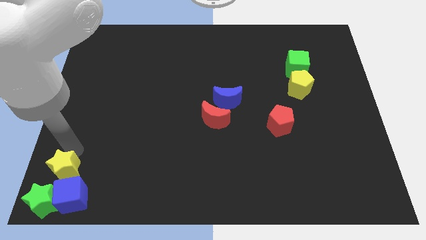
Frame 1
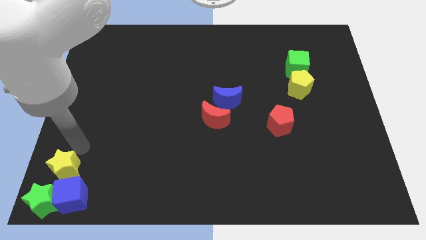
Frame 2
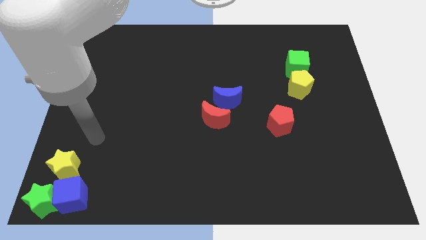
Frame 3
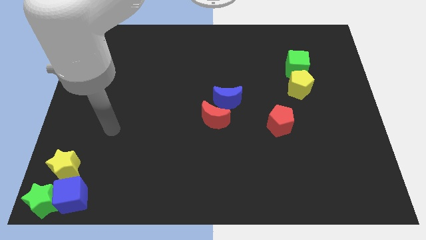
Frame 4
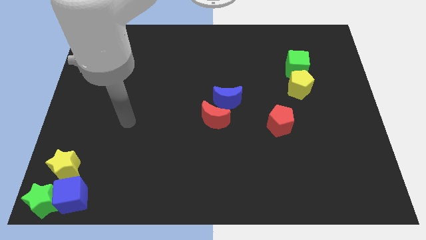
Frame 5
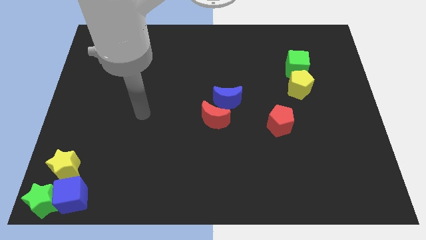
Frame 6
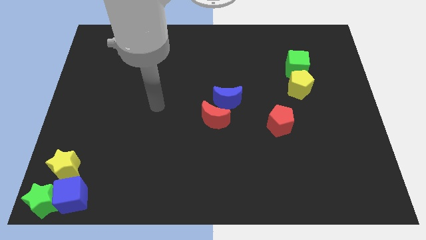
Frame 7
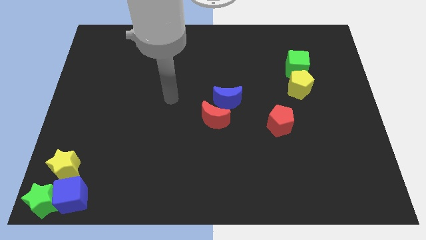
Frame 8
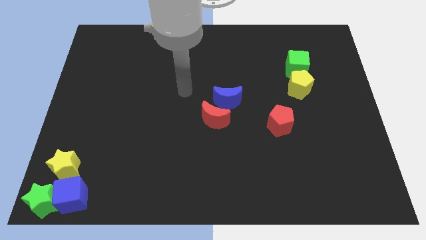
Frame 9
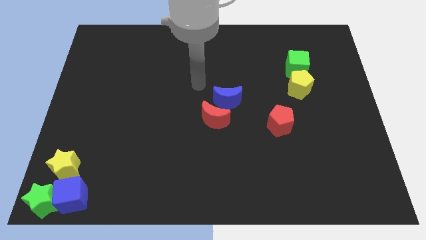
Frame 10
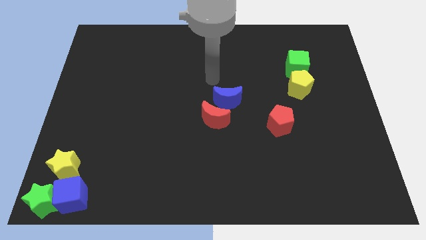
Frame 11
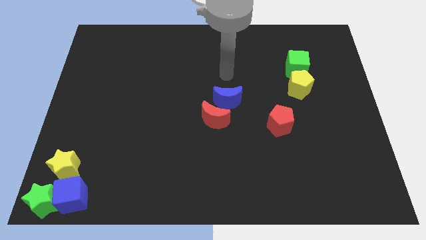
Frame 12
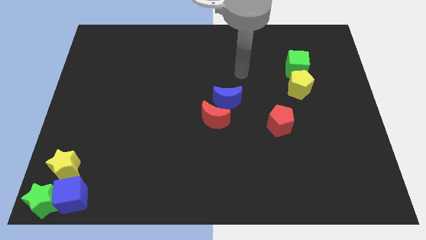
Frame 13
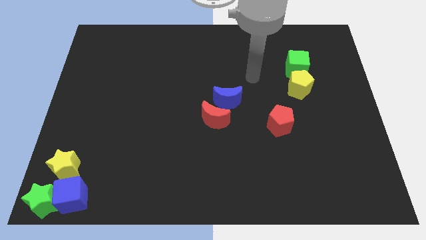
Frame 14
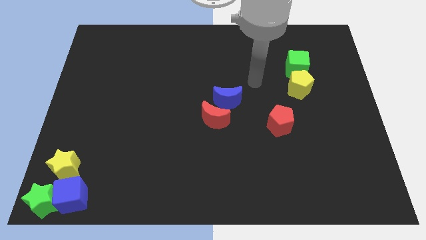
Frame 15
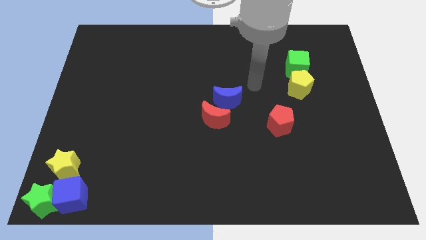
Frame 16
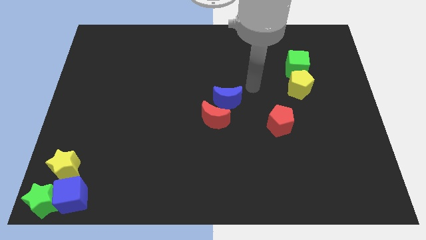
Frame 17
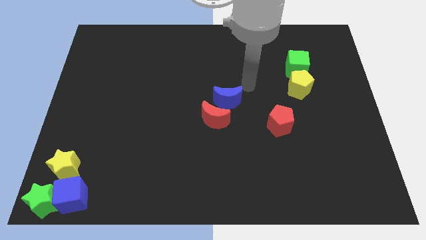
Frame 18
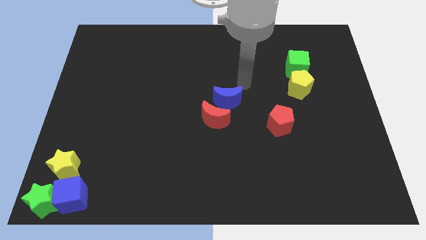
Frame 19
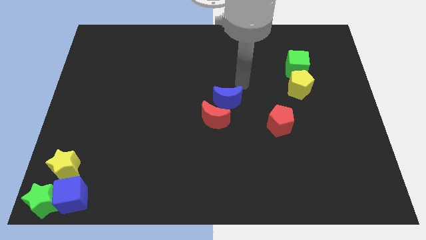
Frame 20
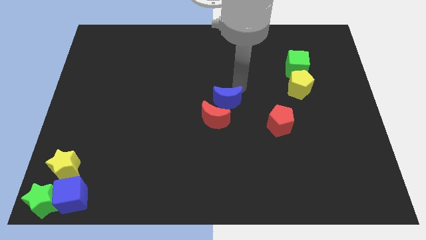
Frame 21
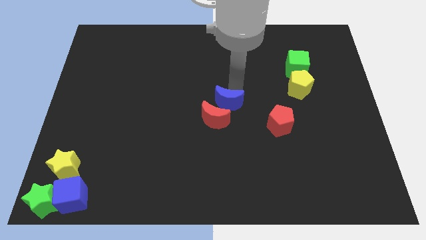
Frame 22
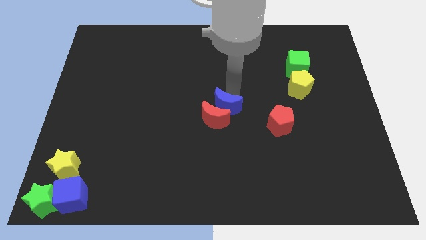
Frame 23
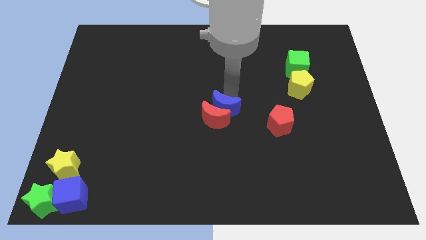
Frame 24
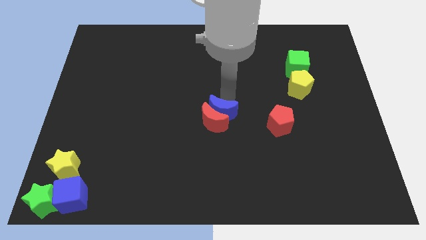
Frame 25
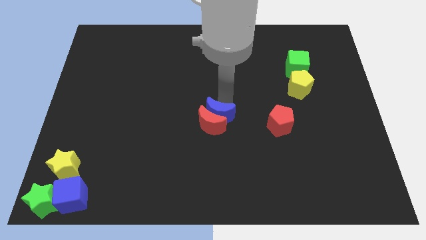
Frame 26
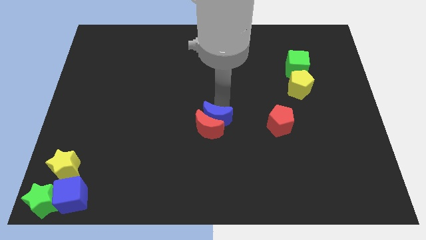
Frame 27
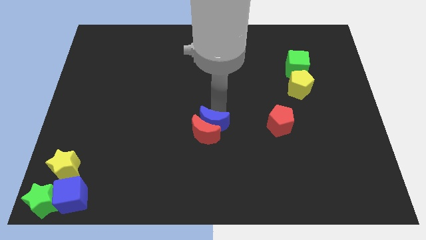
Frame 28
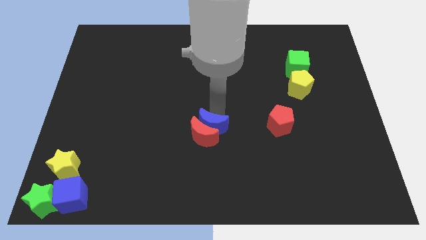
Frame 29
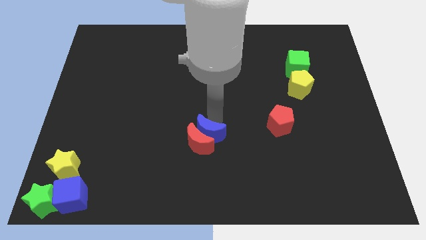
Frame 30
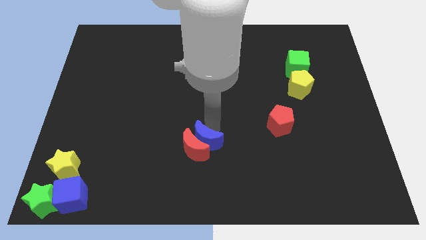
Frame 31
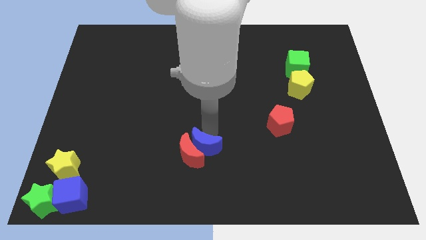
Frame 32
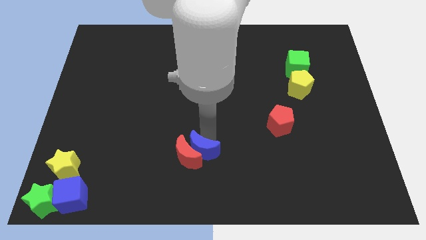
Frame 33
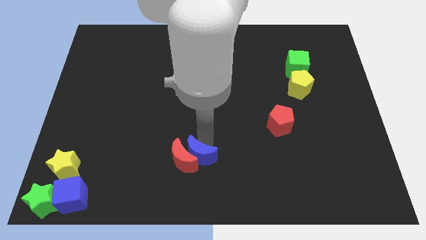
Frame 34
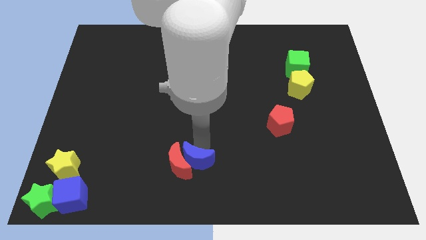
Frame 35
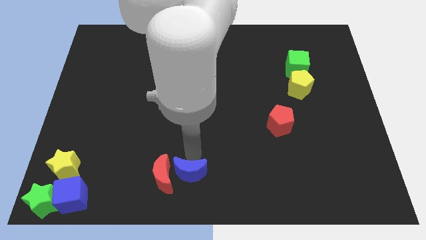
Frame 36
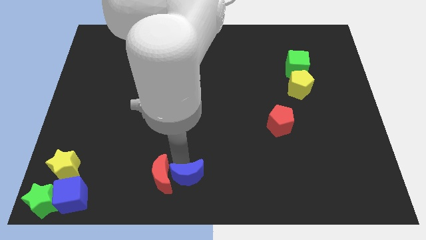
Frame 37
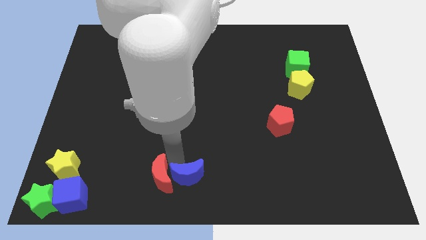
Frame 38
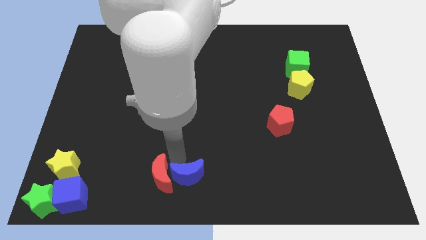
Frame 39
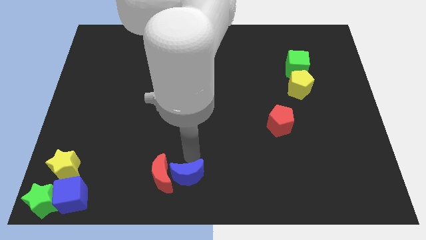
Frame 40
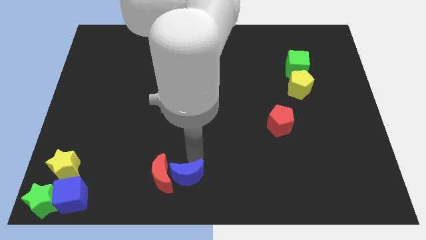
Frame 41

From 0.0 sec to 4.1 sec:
move the red and blue crescent together slightly towards down

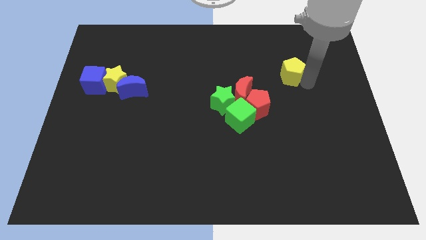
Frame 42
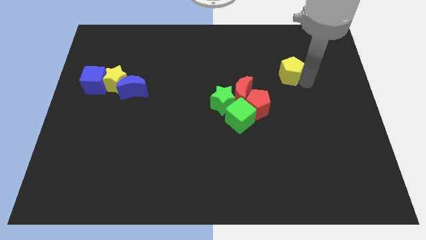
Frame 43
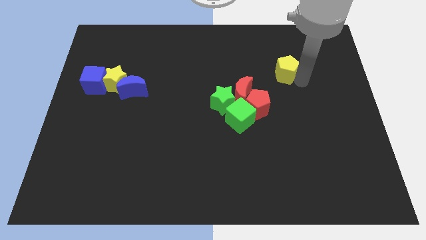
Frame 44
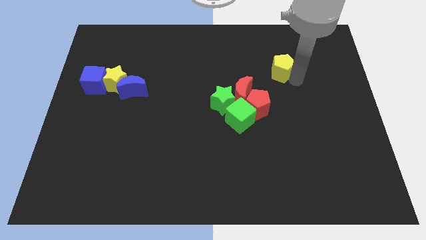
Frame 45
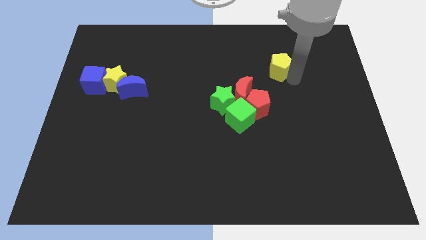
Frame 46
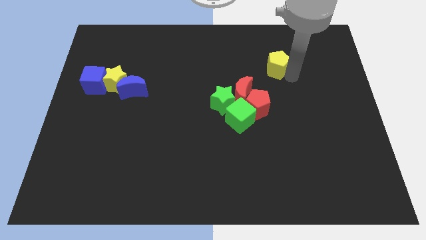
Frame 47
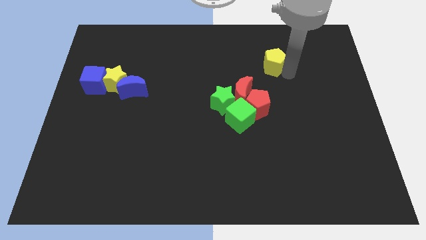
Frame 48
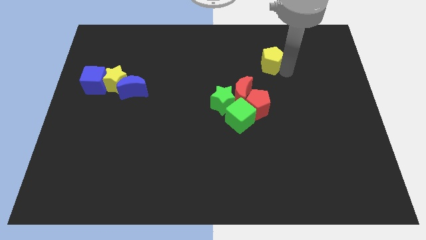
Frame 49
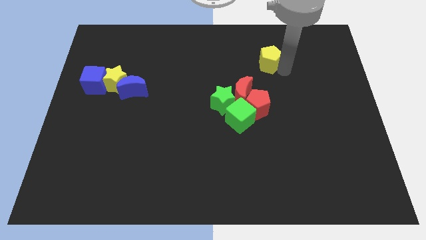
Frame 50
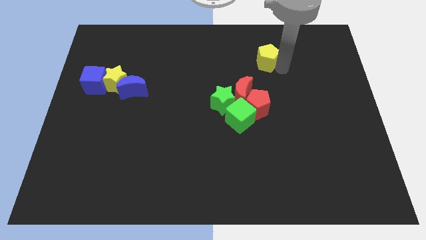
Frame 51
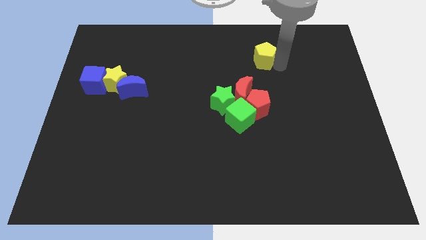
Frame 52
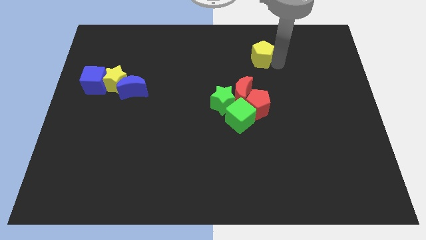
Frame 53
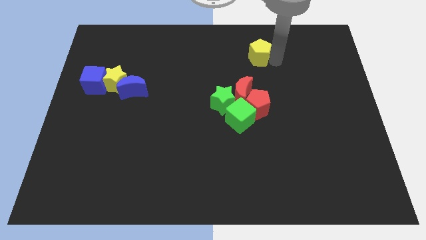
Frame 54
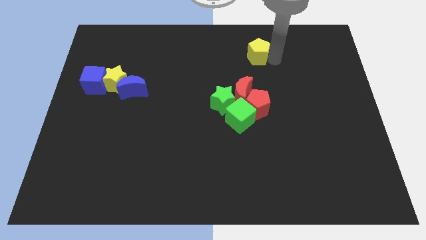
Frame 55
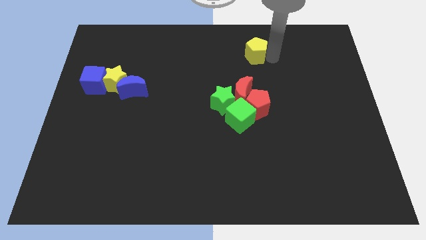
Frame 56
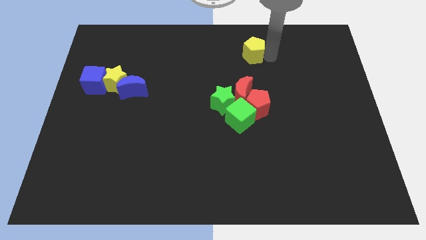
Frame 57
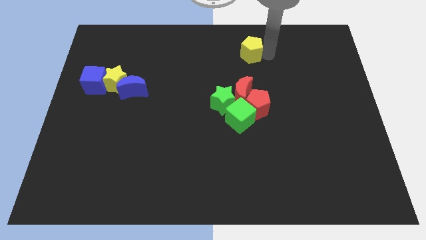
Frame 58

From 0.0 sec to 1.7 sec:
place the yellow pentagon above the red crescent

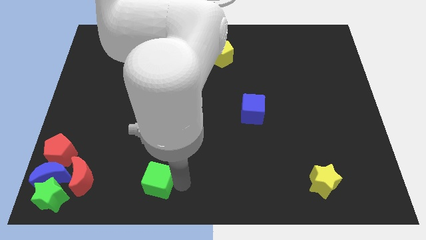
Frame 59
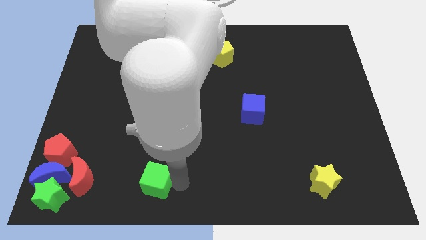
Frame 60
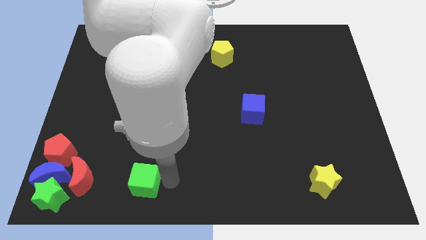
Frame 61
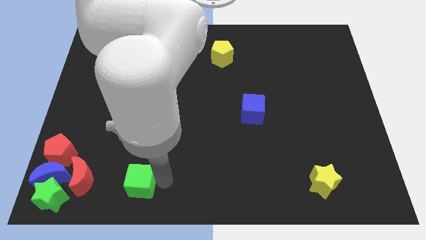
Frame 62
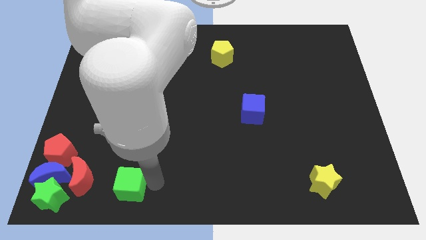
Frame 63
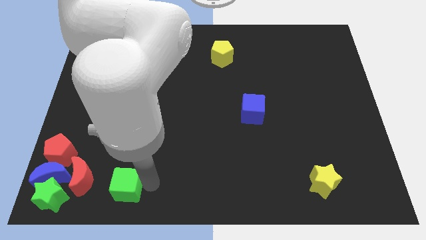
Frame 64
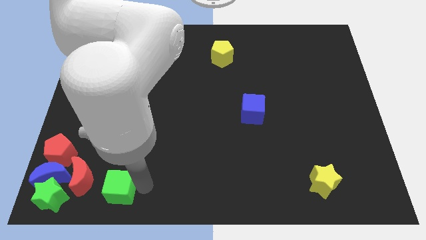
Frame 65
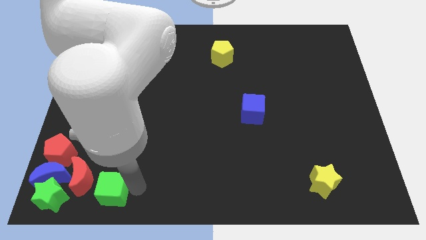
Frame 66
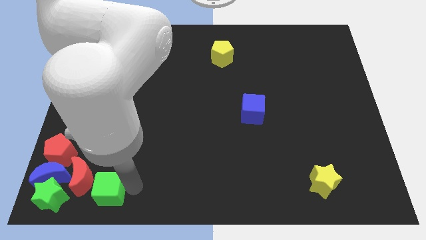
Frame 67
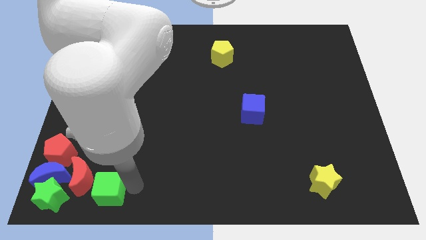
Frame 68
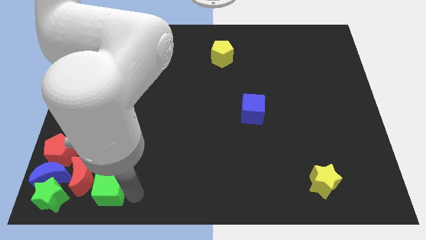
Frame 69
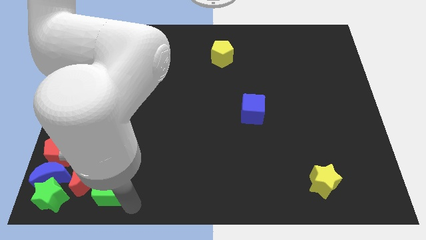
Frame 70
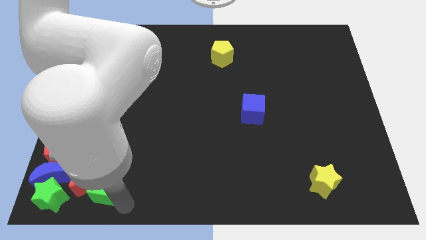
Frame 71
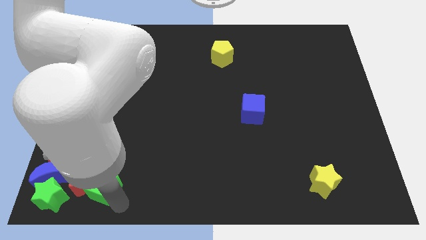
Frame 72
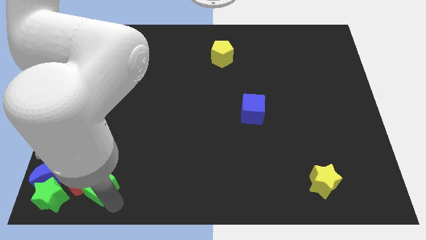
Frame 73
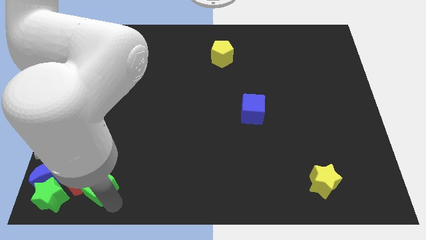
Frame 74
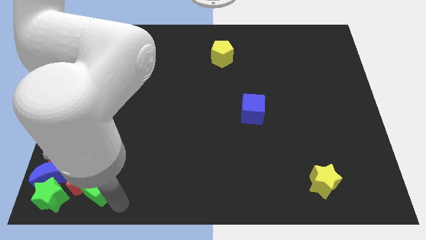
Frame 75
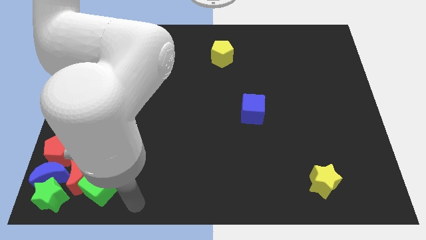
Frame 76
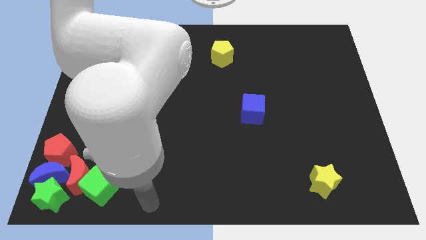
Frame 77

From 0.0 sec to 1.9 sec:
push the green cube into the red moon

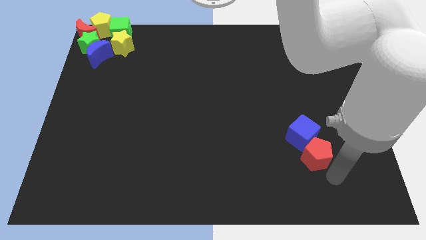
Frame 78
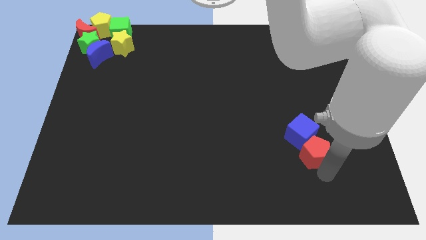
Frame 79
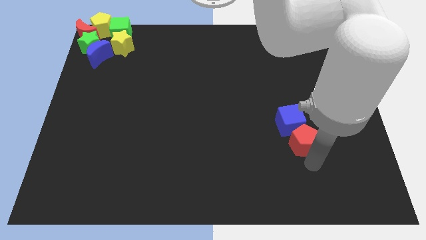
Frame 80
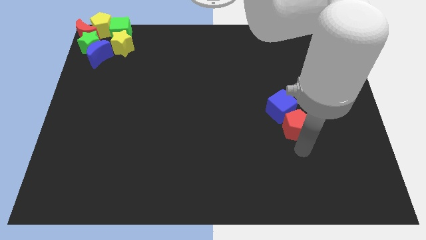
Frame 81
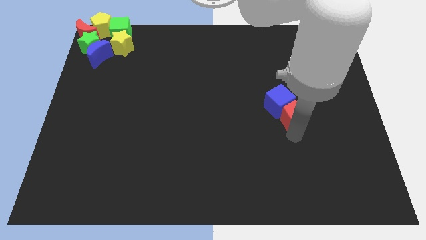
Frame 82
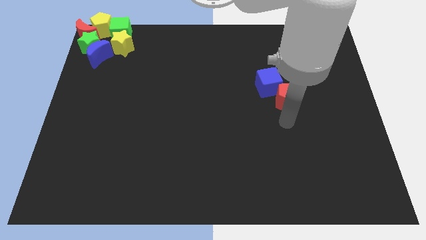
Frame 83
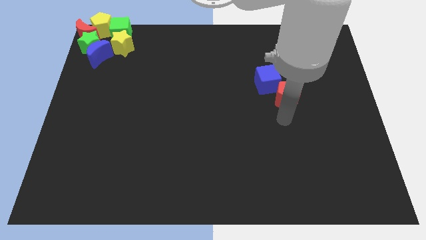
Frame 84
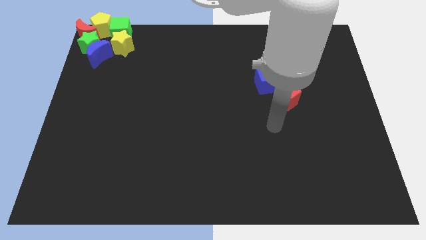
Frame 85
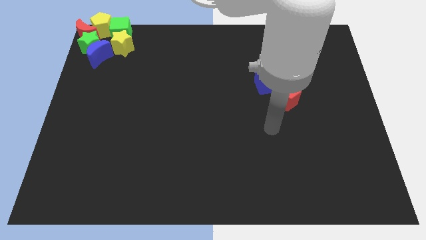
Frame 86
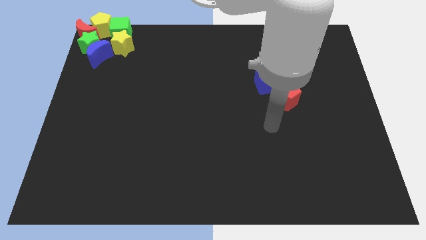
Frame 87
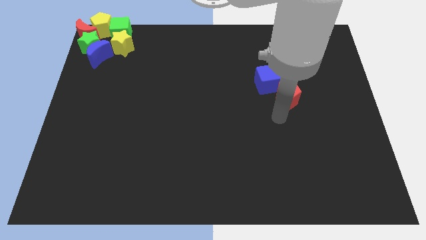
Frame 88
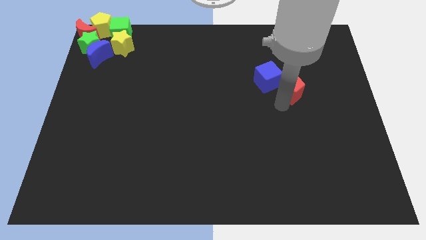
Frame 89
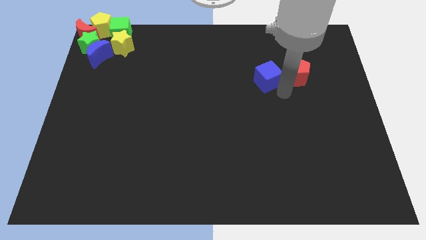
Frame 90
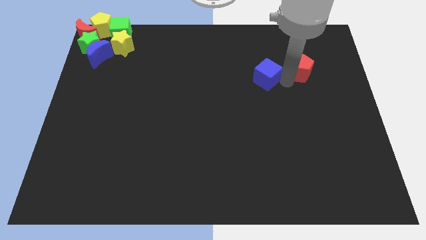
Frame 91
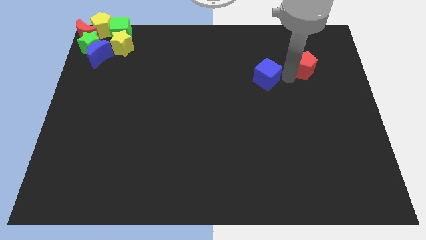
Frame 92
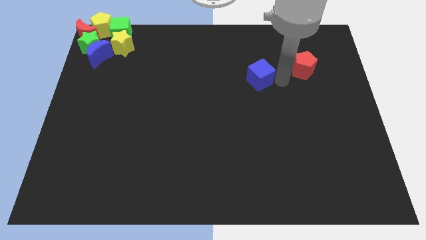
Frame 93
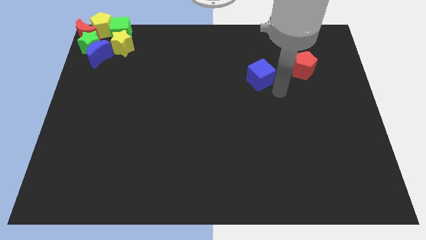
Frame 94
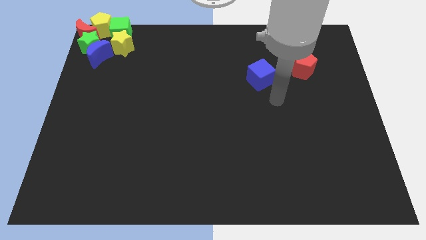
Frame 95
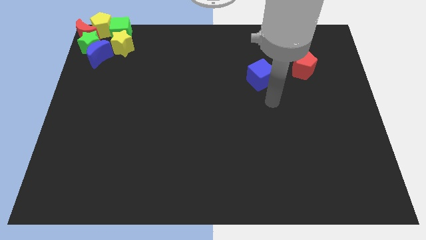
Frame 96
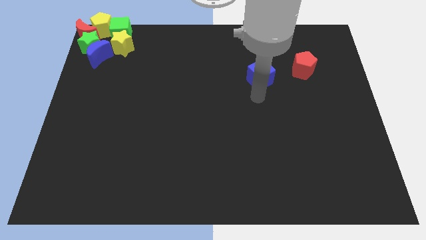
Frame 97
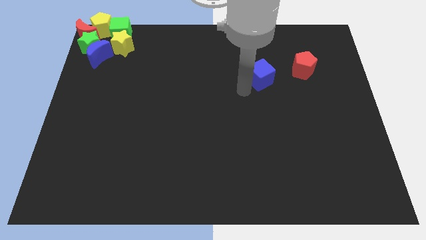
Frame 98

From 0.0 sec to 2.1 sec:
separate the blue cube and red pentagon
